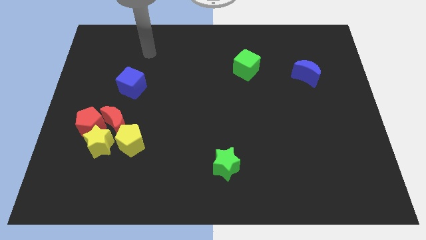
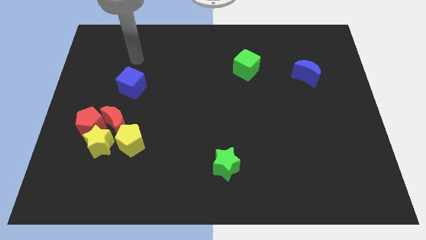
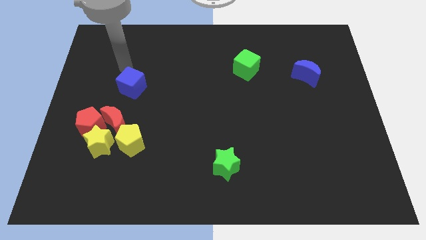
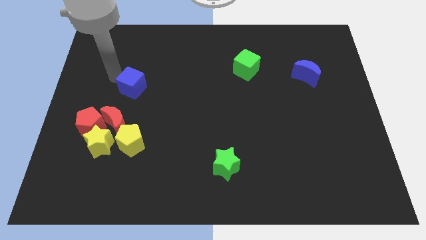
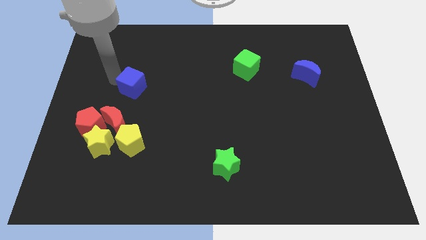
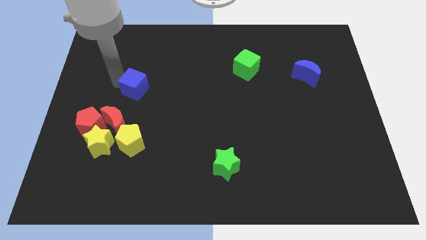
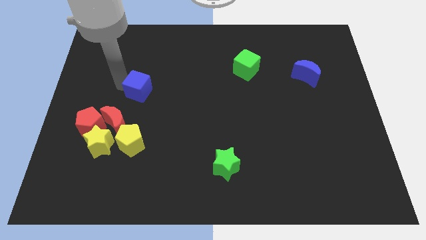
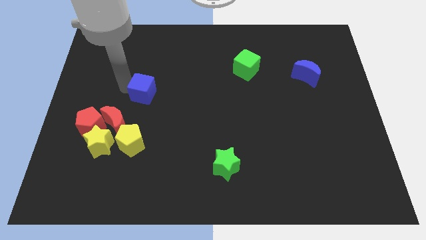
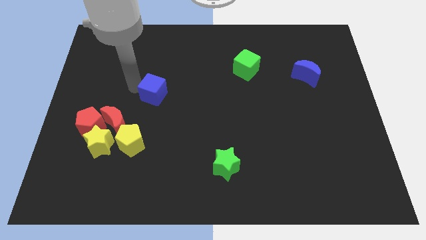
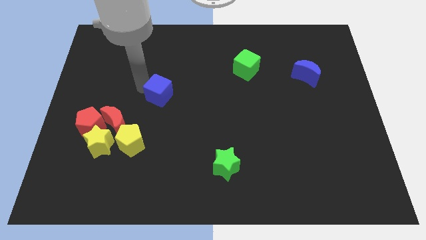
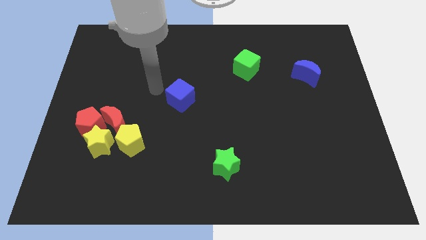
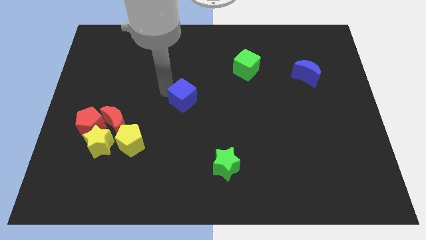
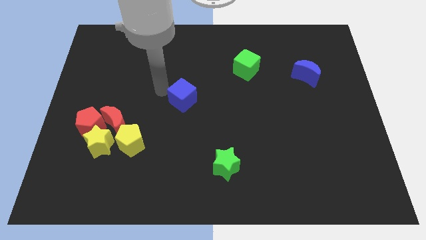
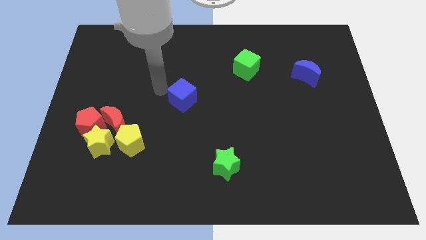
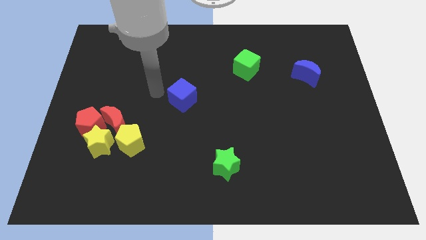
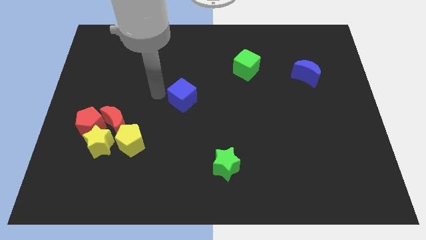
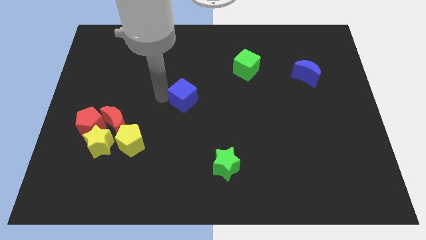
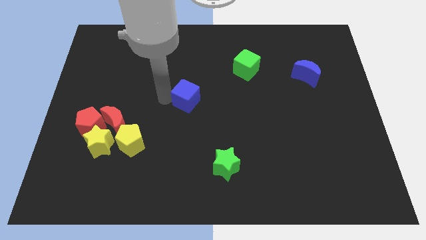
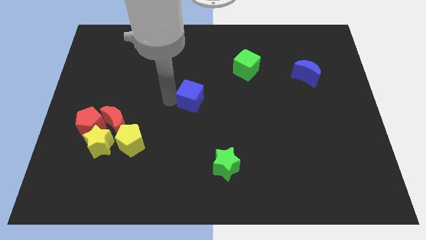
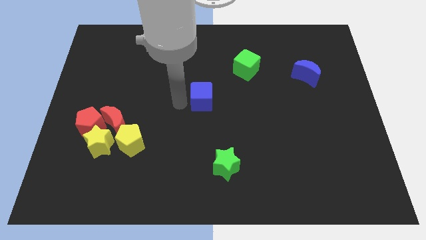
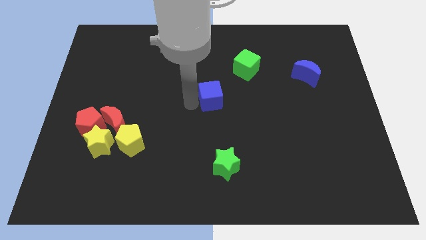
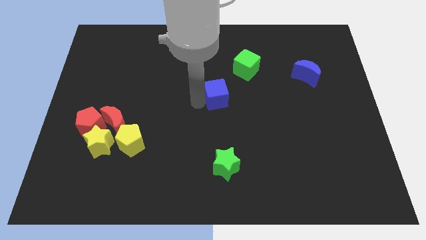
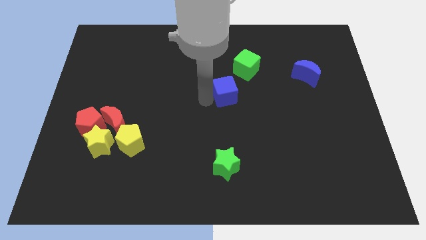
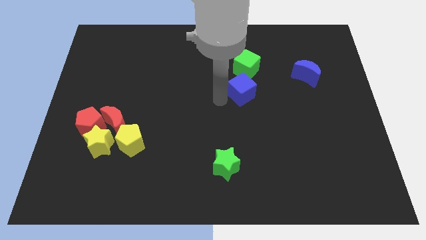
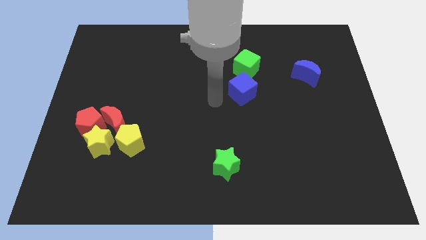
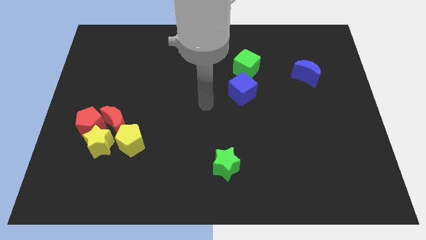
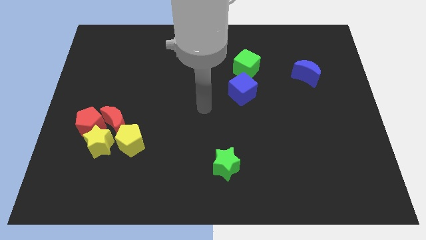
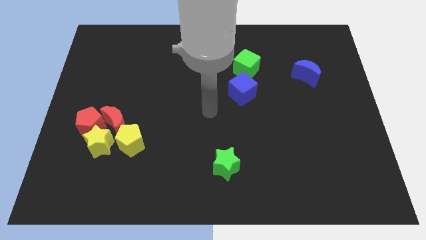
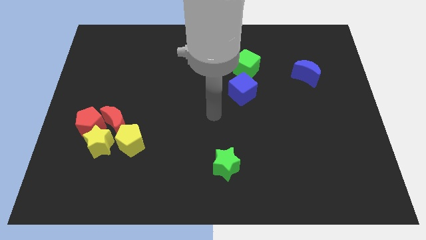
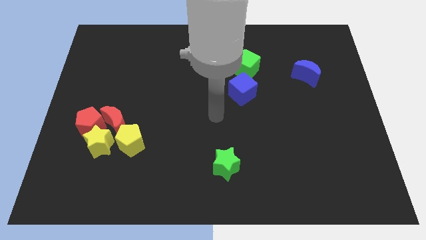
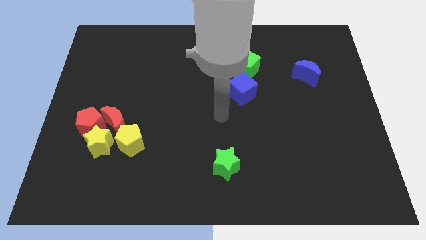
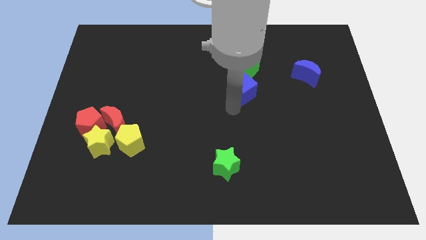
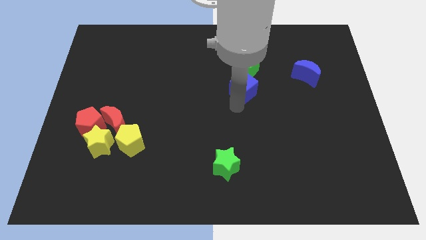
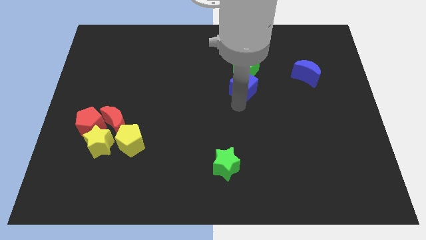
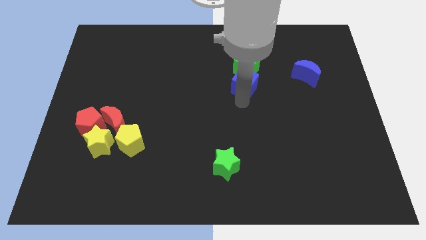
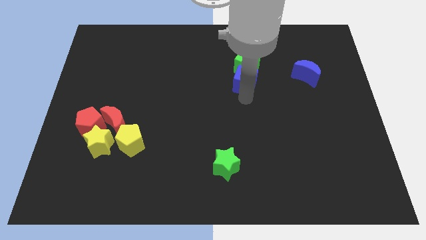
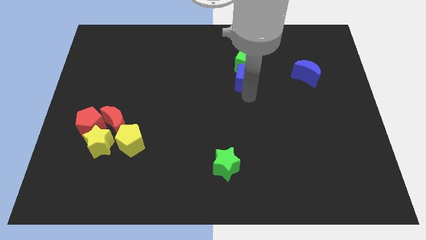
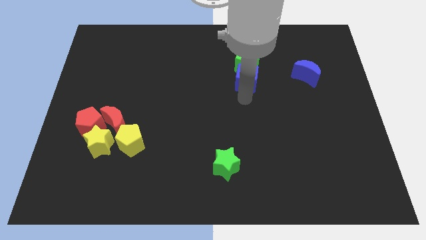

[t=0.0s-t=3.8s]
push the blue cube into the bottom of the green cube

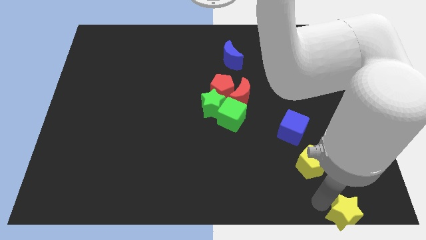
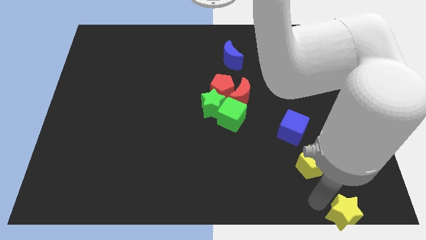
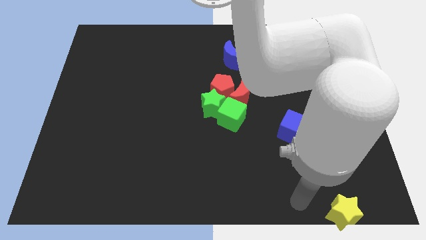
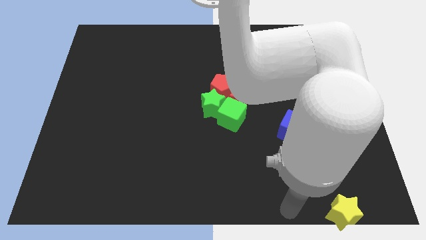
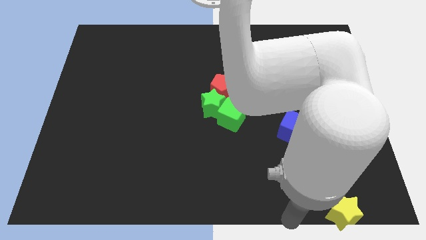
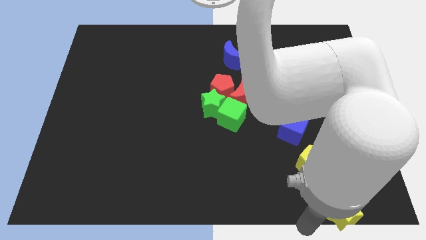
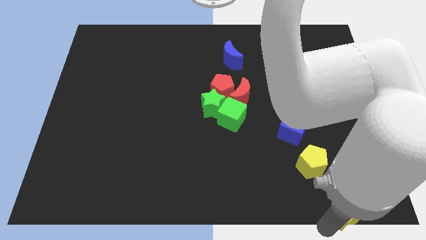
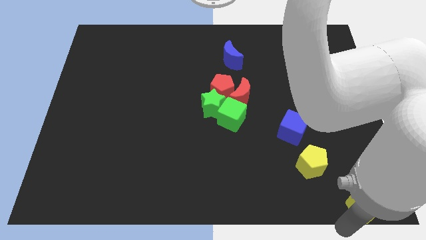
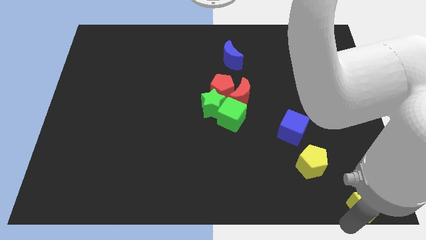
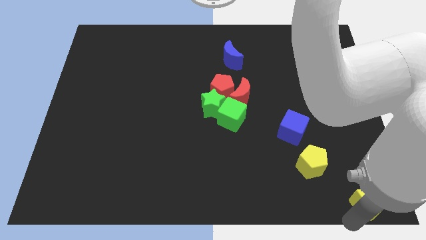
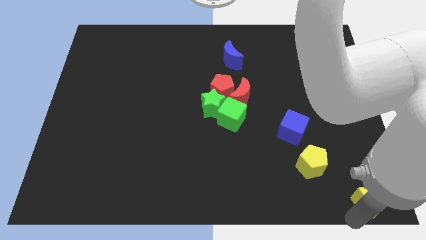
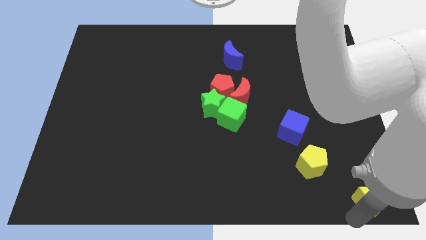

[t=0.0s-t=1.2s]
push the yellow star at the bottom right

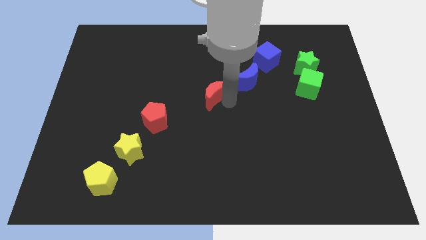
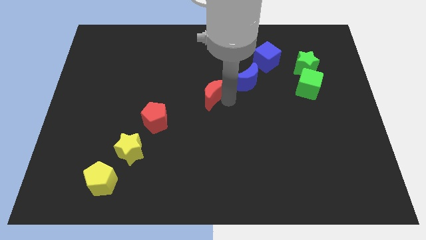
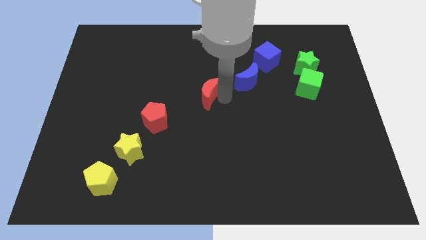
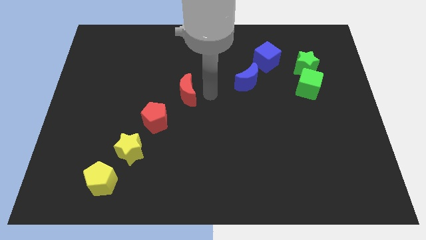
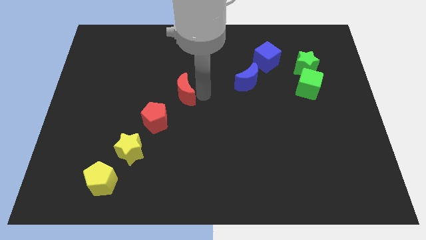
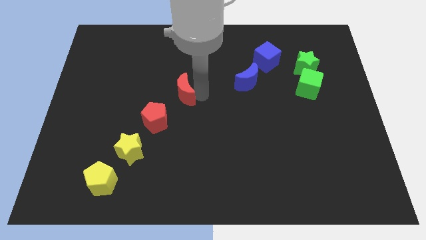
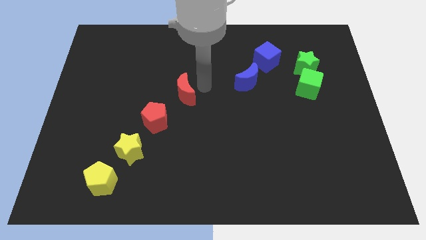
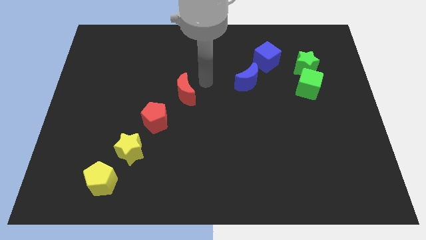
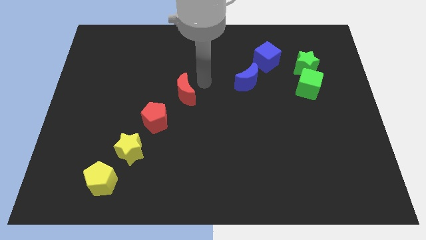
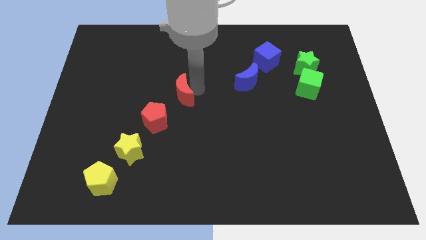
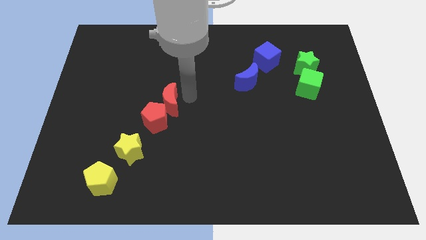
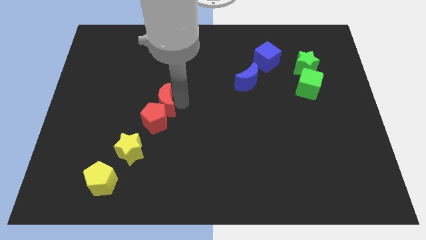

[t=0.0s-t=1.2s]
place red crescent near red pentagon

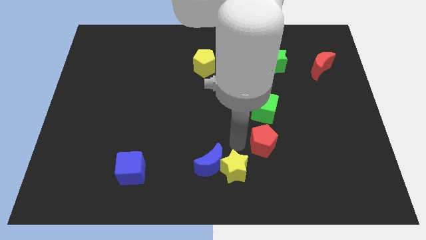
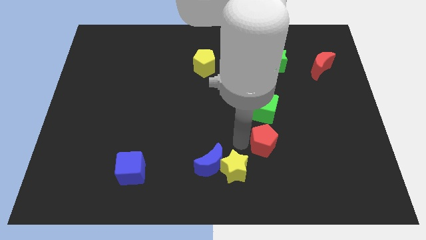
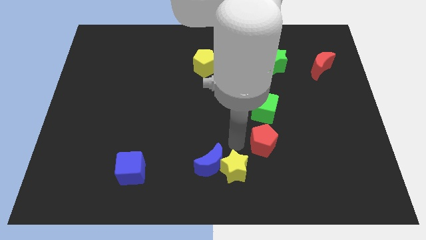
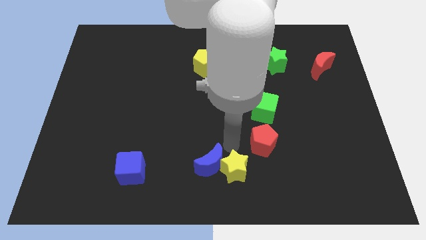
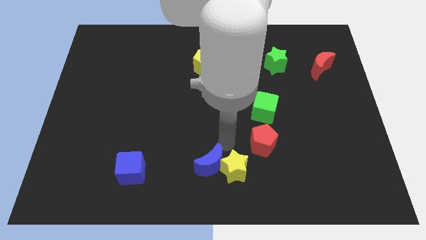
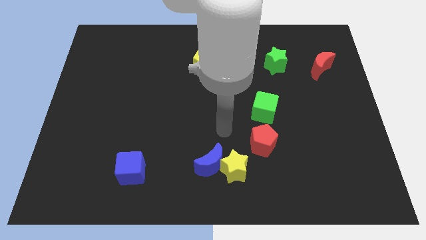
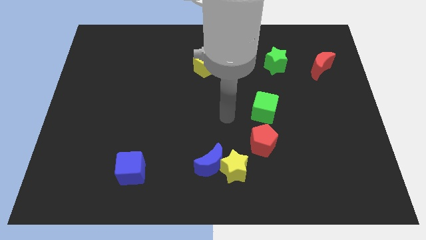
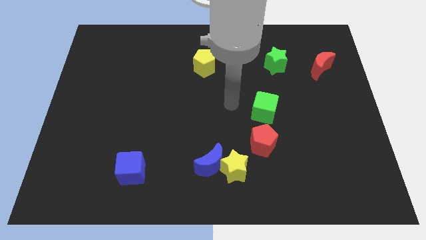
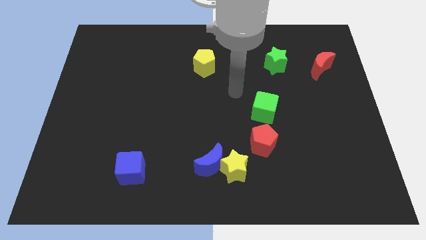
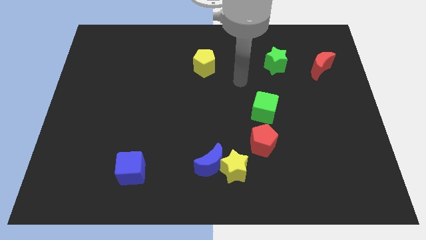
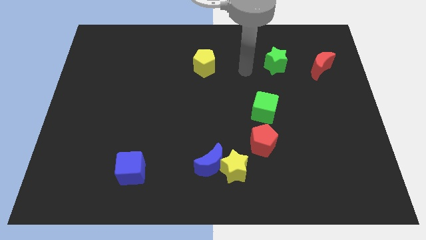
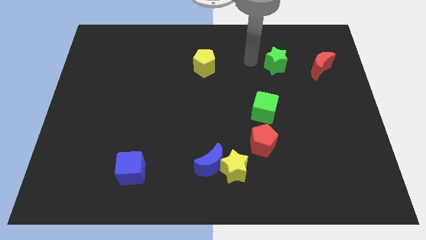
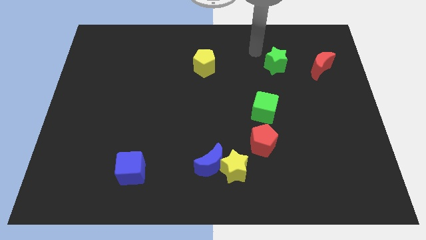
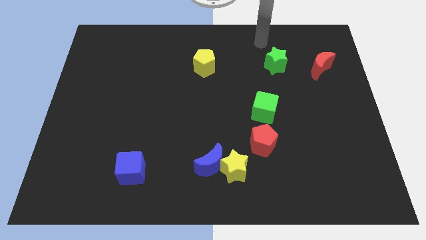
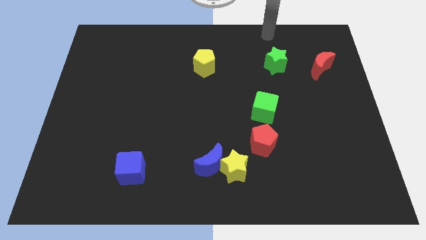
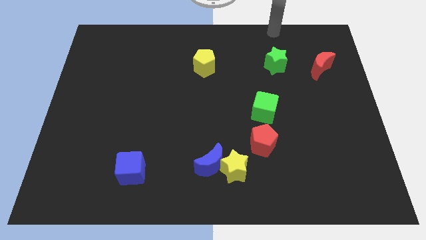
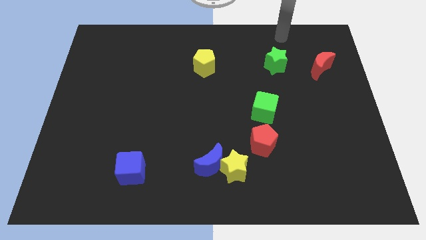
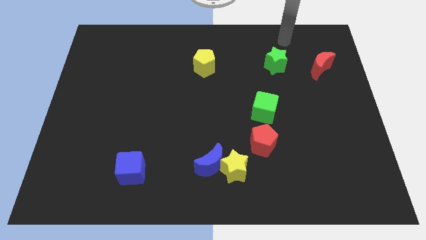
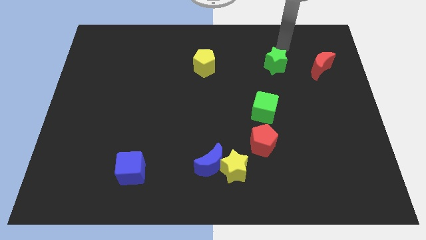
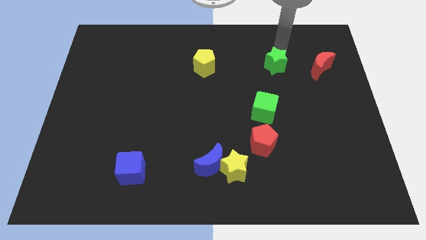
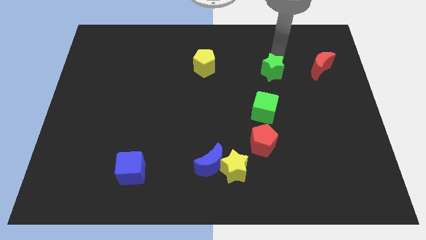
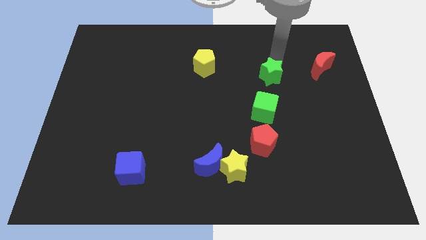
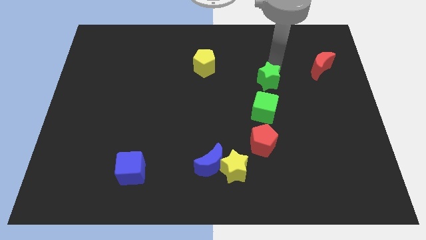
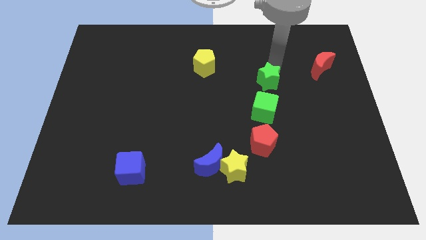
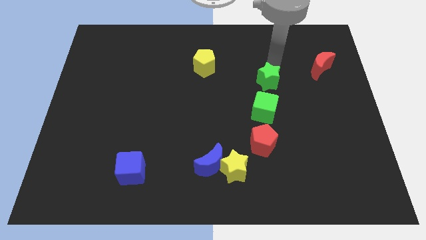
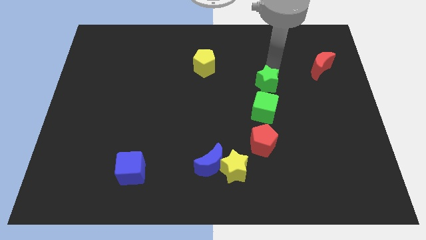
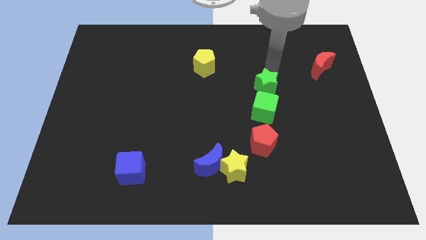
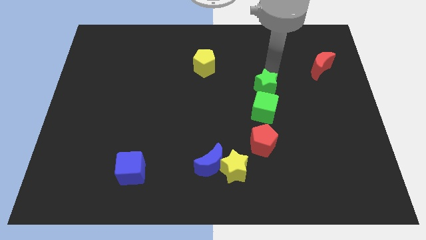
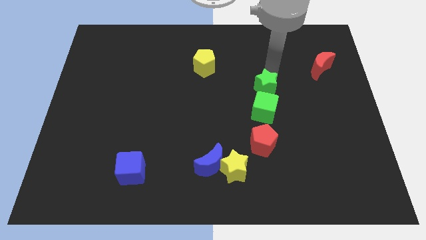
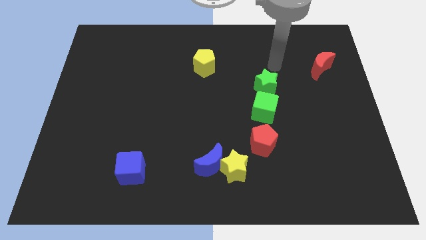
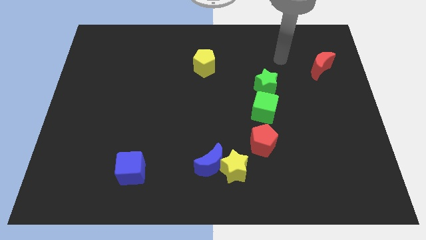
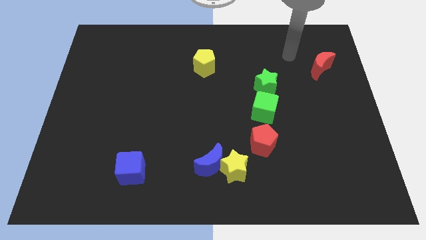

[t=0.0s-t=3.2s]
attach the green star to the green cube
